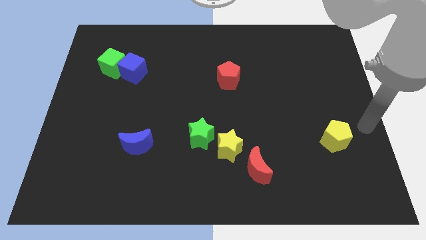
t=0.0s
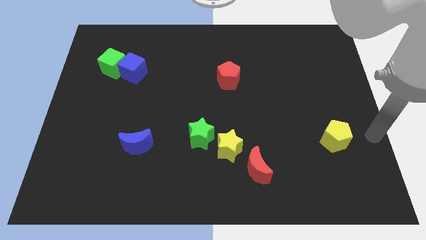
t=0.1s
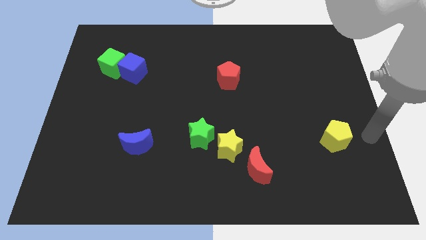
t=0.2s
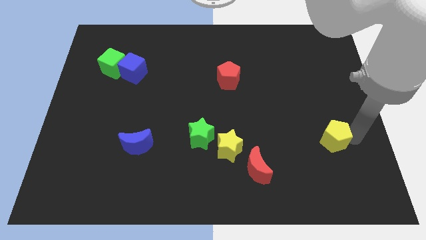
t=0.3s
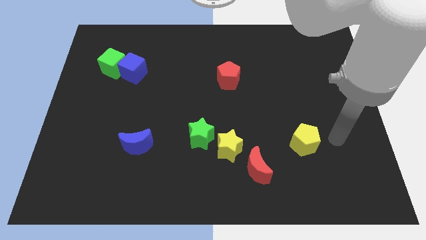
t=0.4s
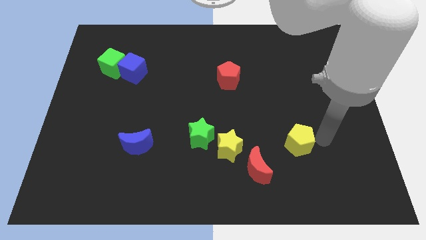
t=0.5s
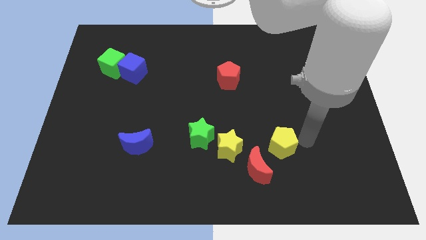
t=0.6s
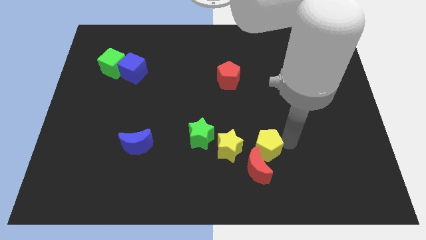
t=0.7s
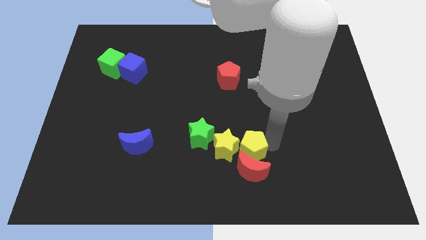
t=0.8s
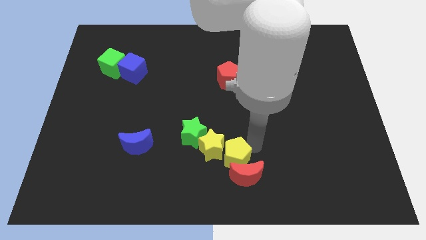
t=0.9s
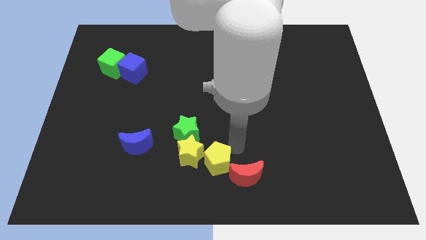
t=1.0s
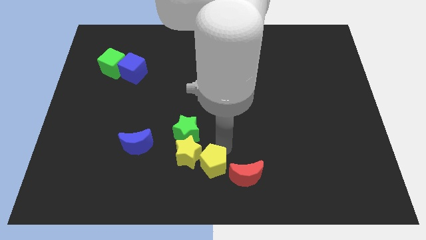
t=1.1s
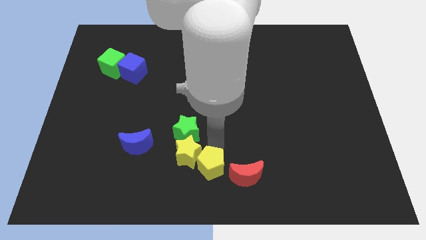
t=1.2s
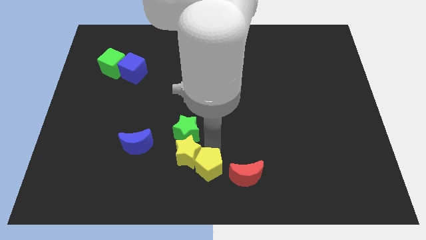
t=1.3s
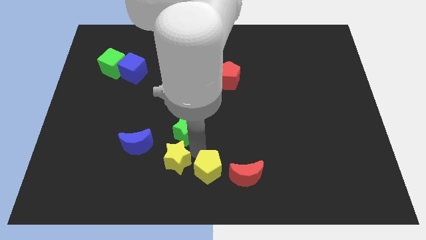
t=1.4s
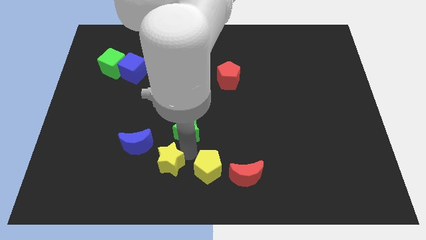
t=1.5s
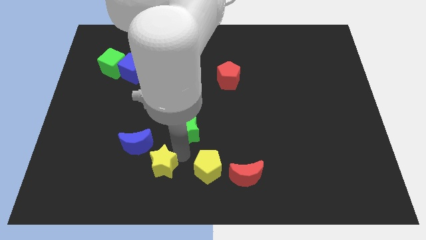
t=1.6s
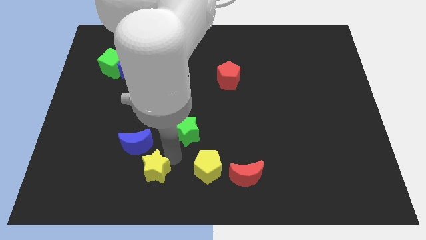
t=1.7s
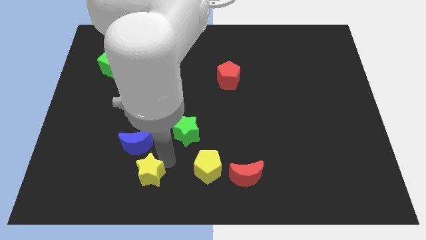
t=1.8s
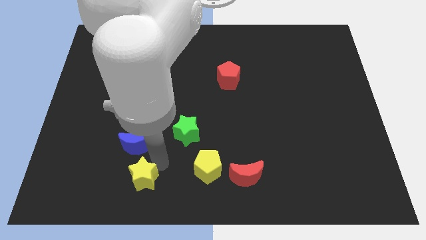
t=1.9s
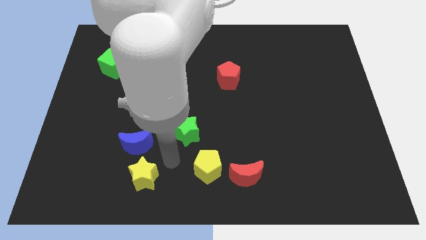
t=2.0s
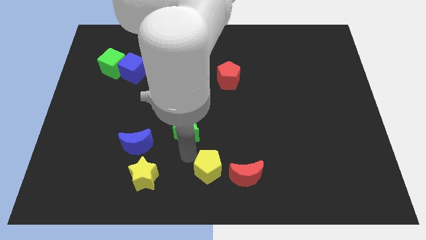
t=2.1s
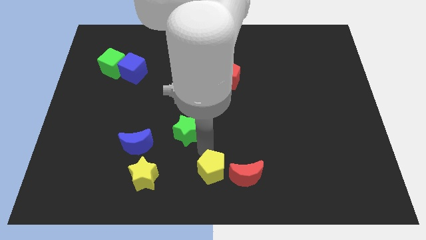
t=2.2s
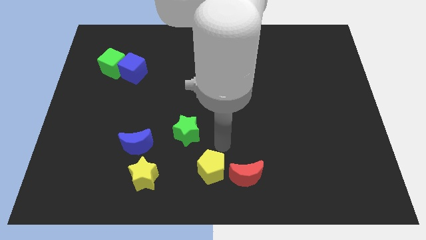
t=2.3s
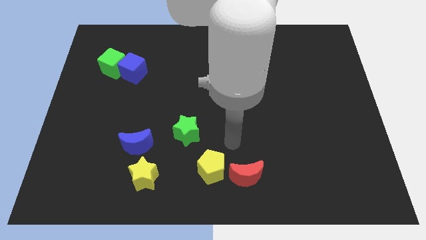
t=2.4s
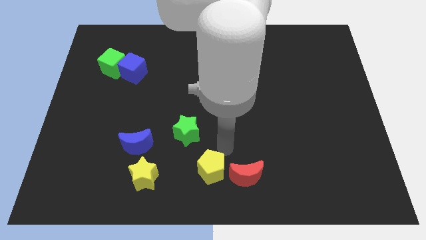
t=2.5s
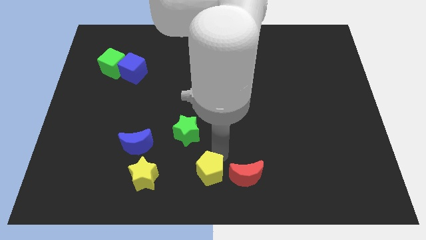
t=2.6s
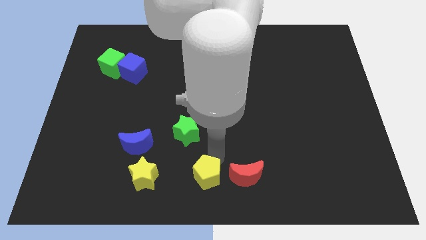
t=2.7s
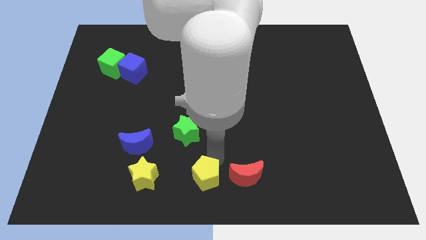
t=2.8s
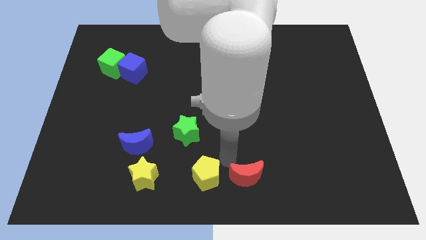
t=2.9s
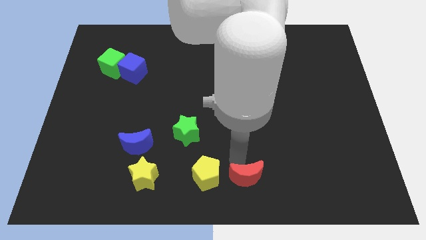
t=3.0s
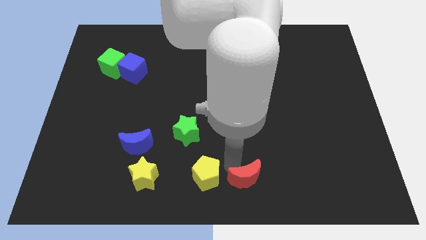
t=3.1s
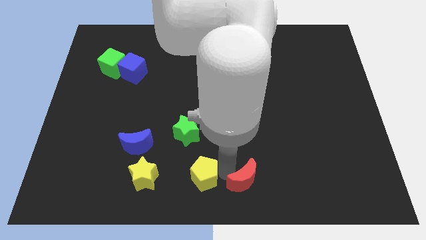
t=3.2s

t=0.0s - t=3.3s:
place the yellow pentagon to the left of the red moon

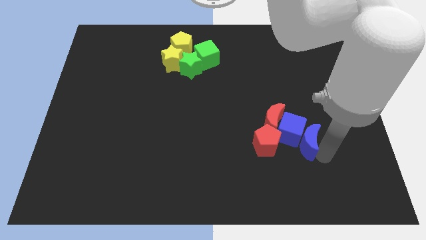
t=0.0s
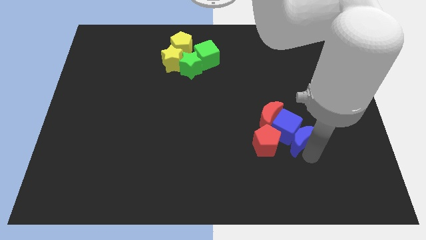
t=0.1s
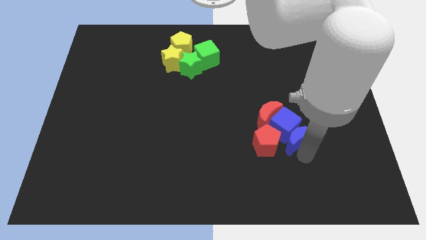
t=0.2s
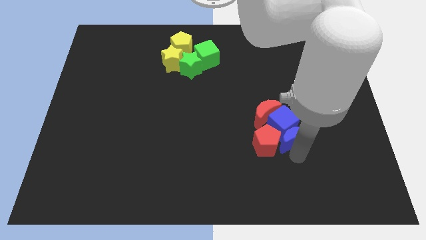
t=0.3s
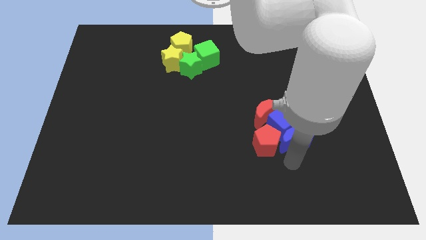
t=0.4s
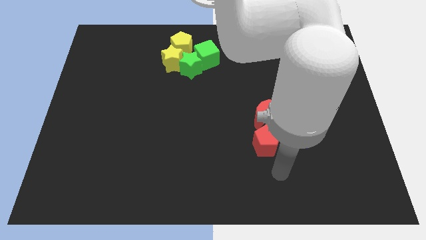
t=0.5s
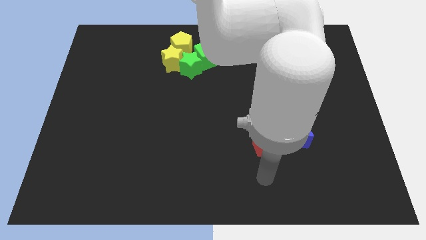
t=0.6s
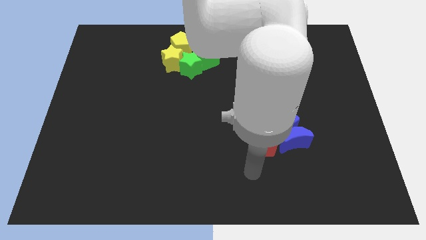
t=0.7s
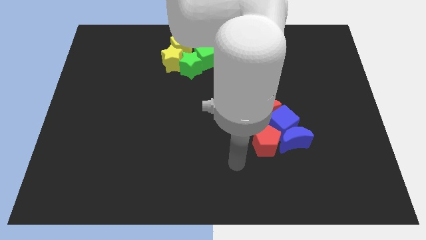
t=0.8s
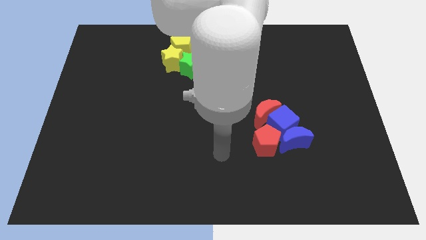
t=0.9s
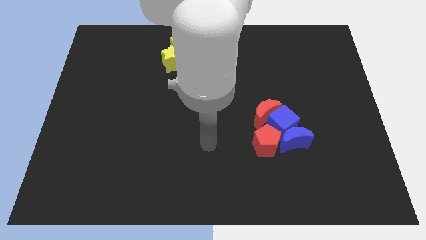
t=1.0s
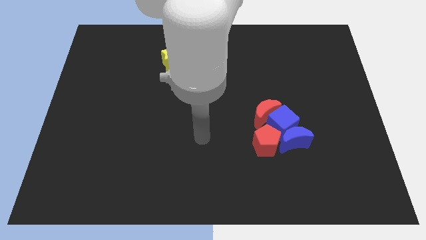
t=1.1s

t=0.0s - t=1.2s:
move the arm left to the red pentagon

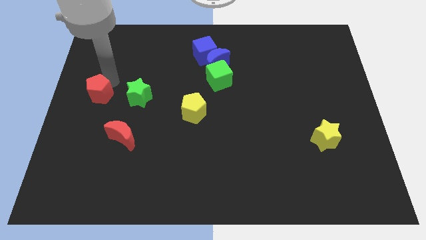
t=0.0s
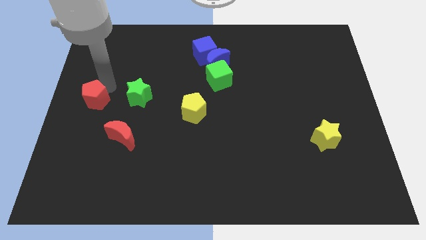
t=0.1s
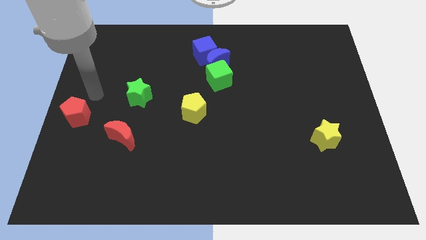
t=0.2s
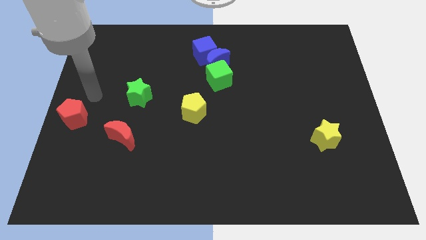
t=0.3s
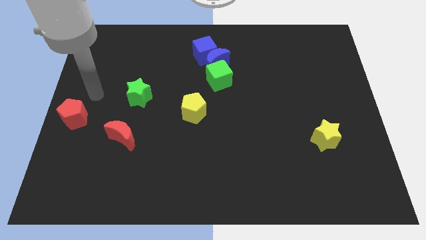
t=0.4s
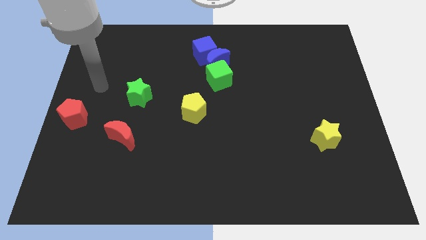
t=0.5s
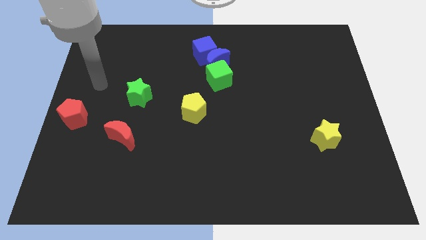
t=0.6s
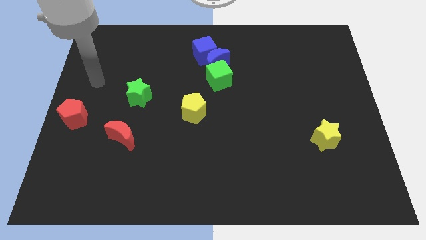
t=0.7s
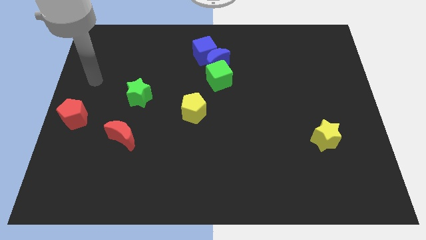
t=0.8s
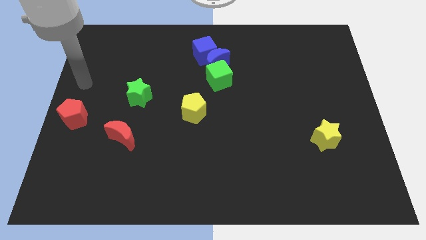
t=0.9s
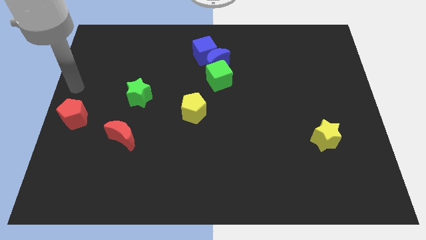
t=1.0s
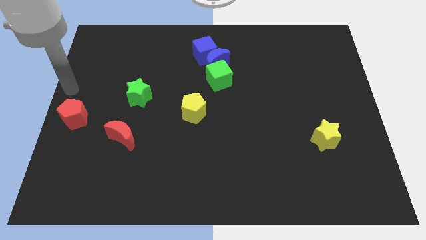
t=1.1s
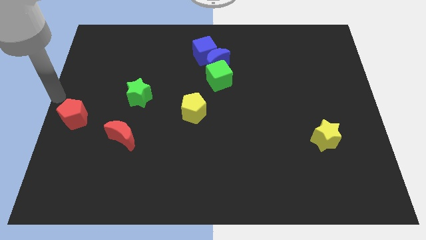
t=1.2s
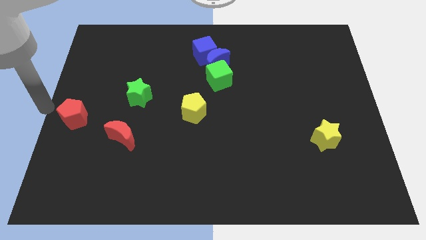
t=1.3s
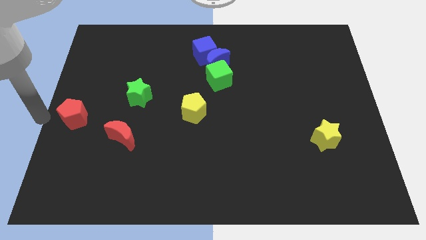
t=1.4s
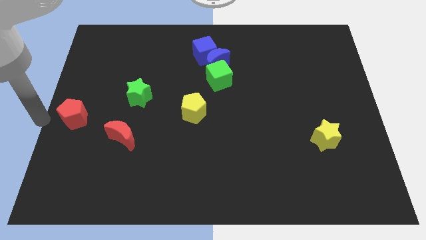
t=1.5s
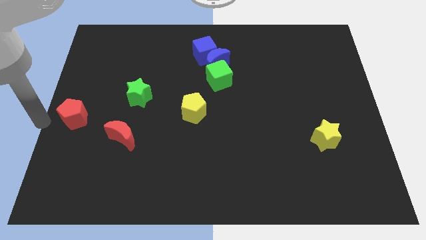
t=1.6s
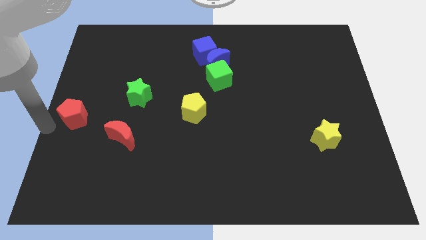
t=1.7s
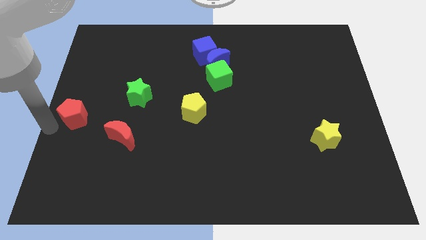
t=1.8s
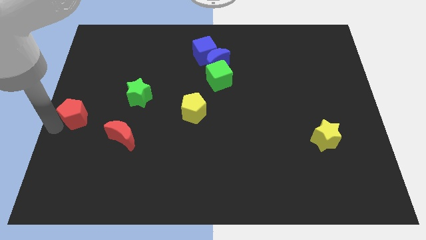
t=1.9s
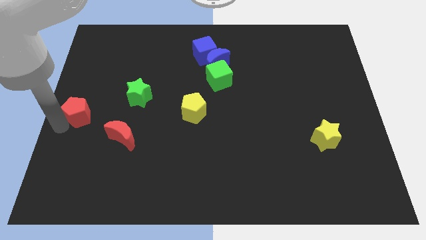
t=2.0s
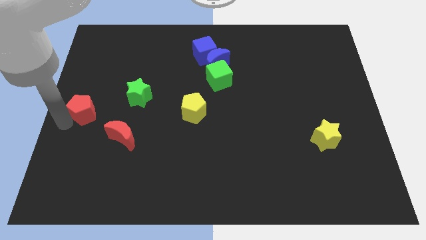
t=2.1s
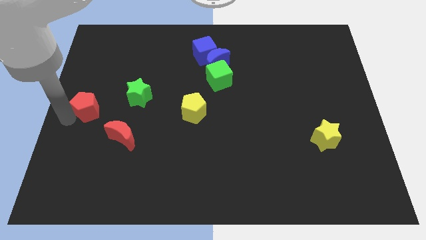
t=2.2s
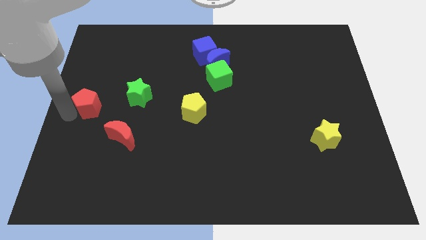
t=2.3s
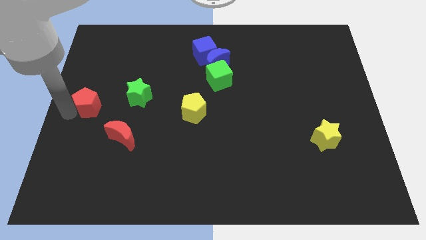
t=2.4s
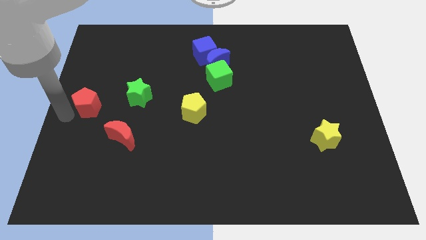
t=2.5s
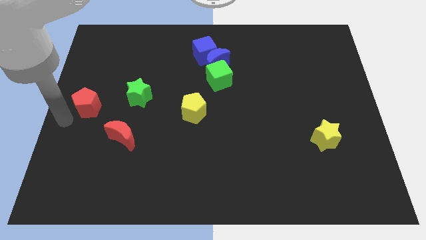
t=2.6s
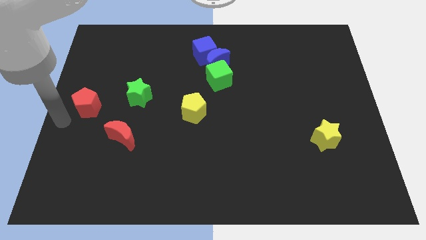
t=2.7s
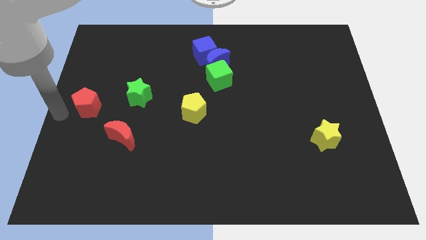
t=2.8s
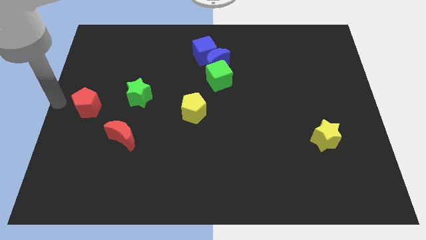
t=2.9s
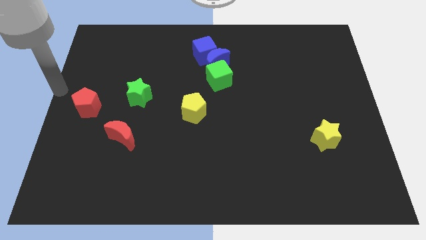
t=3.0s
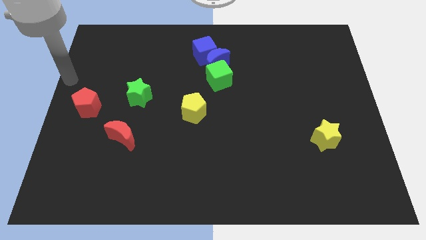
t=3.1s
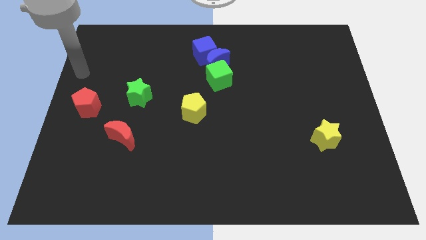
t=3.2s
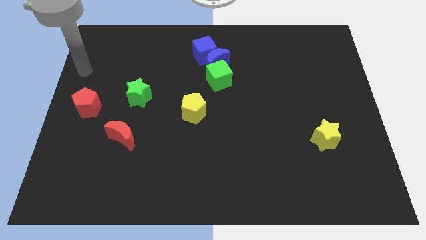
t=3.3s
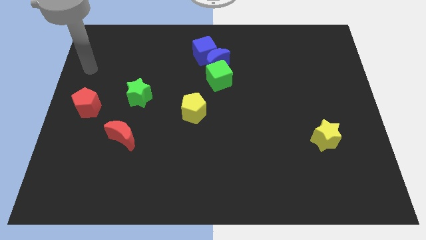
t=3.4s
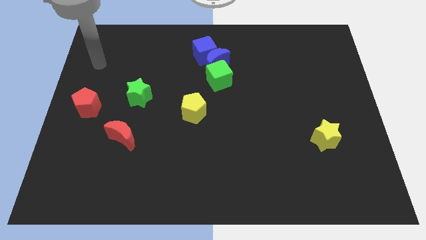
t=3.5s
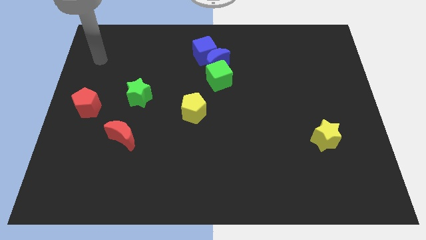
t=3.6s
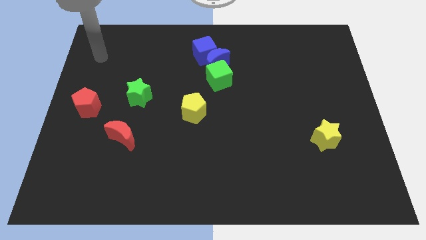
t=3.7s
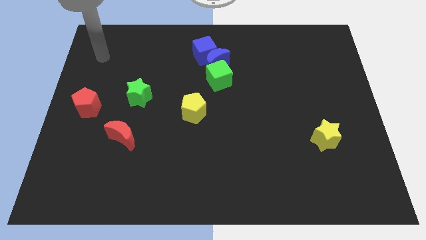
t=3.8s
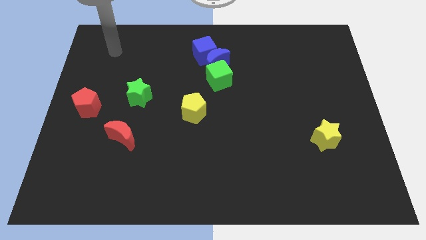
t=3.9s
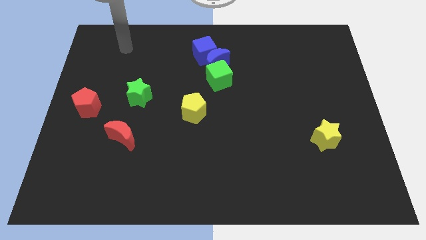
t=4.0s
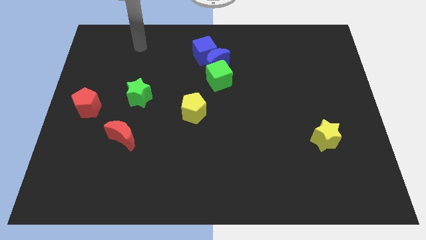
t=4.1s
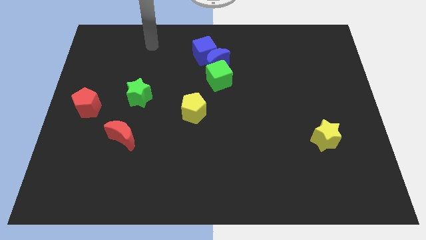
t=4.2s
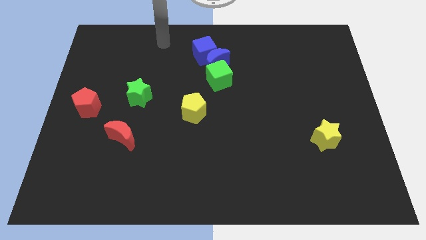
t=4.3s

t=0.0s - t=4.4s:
place the red pentagon to form a triangle with green star and the red crescent
